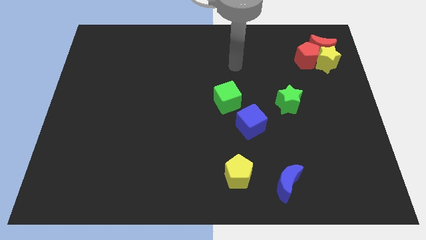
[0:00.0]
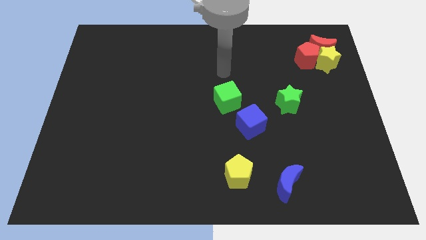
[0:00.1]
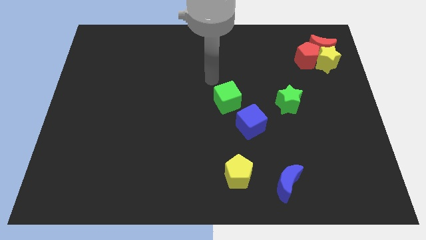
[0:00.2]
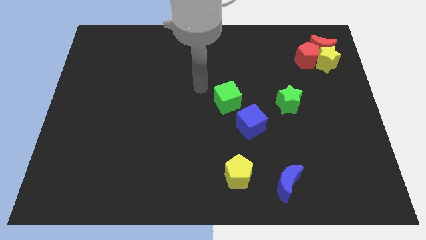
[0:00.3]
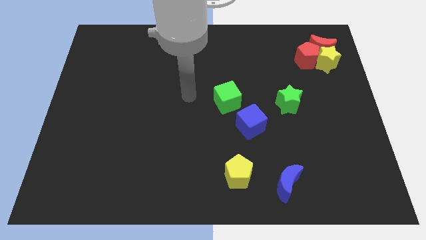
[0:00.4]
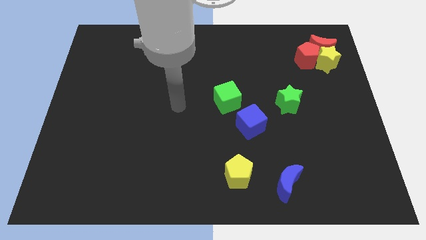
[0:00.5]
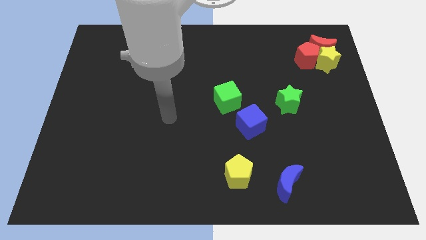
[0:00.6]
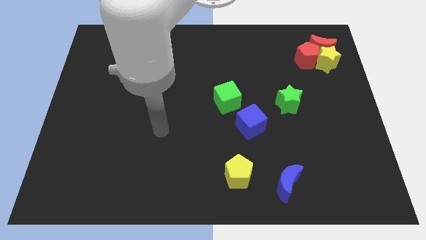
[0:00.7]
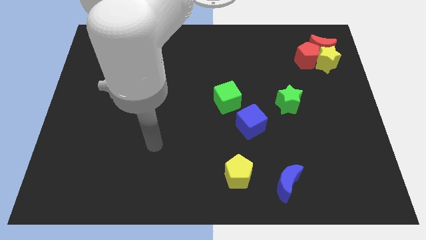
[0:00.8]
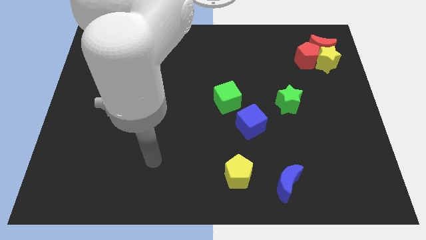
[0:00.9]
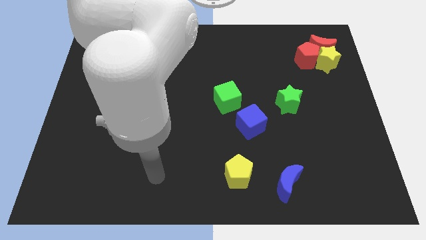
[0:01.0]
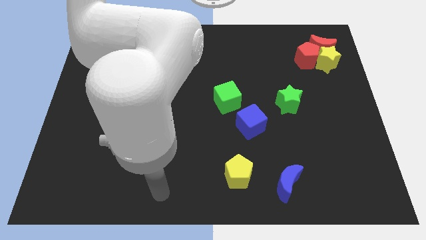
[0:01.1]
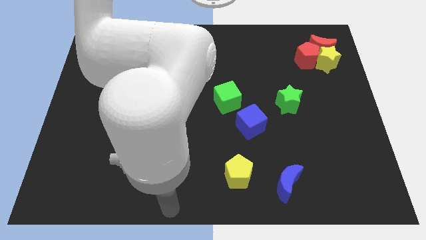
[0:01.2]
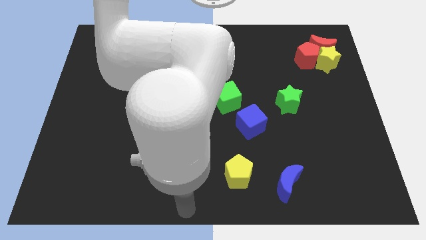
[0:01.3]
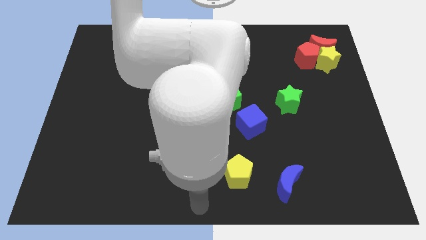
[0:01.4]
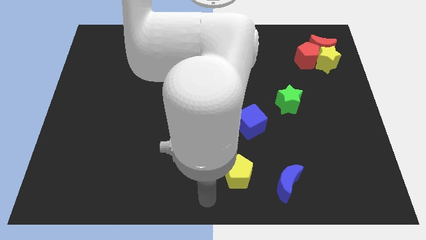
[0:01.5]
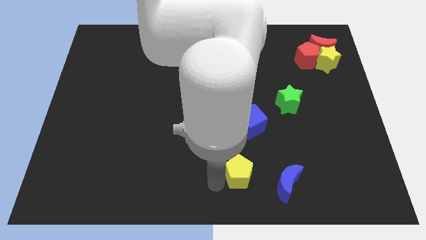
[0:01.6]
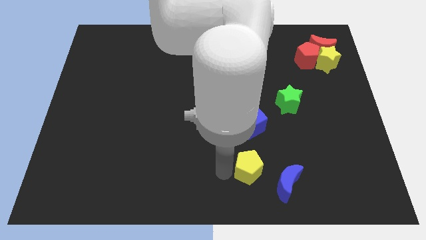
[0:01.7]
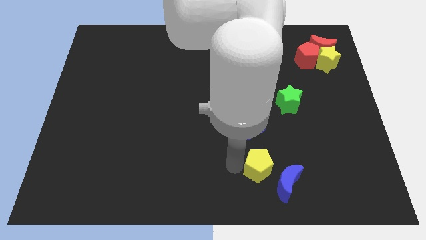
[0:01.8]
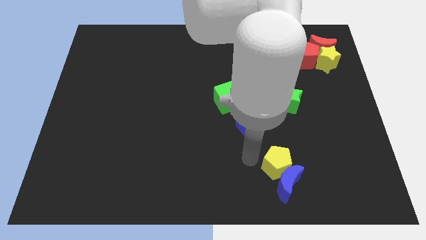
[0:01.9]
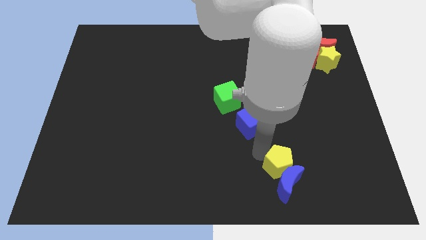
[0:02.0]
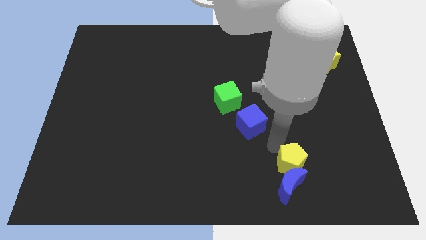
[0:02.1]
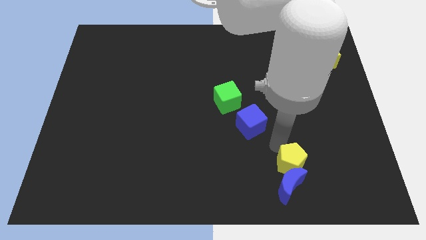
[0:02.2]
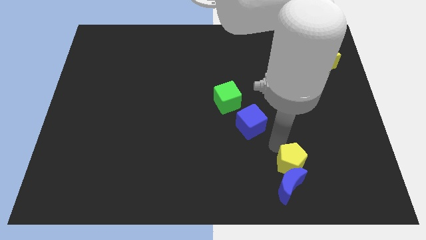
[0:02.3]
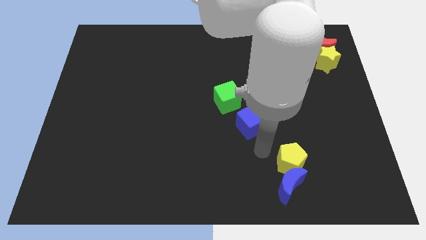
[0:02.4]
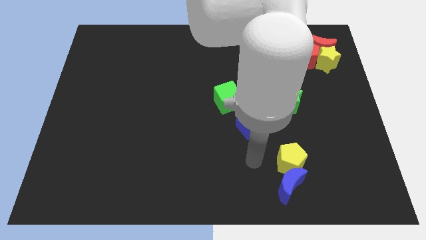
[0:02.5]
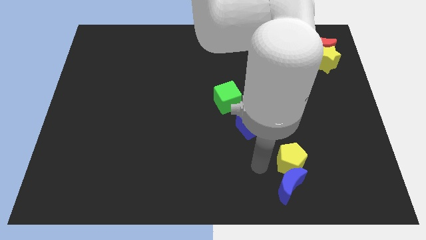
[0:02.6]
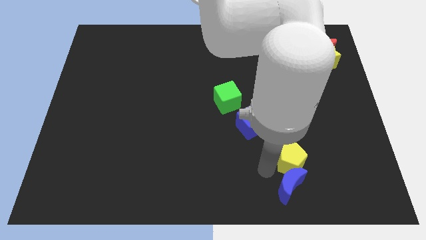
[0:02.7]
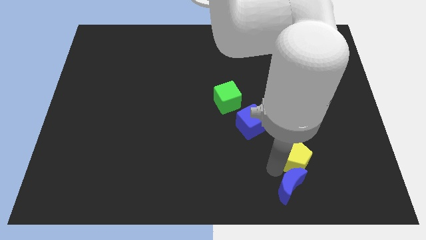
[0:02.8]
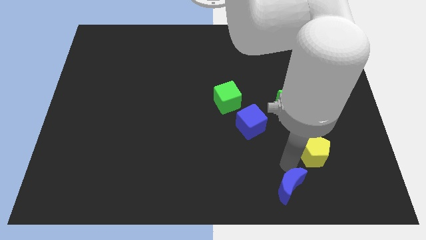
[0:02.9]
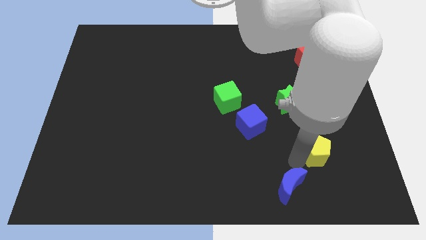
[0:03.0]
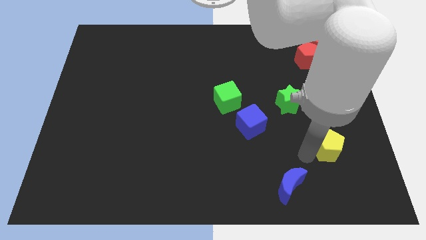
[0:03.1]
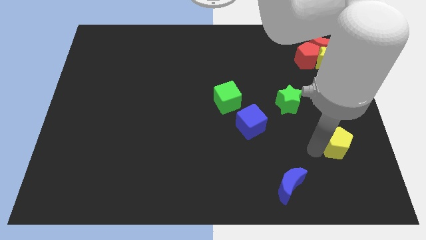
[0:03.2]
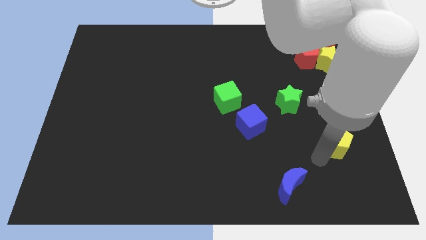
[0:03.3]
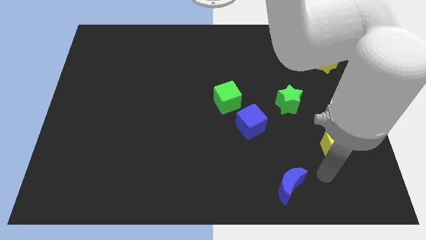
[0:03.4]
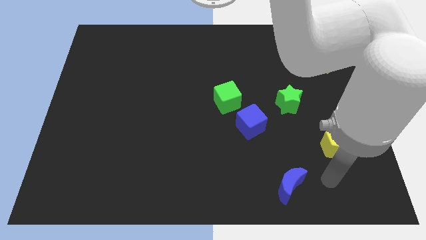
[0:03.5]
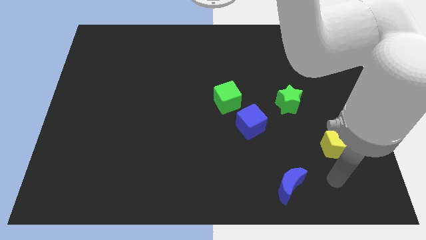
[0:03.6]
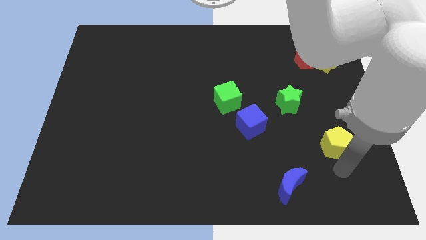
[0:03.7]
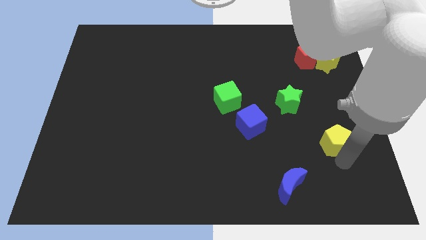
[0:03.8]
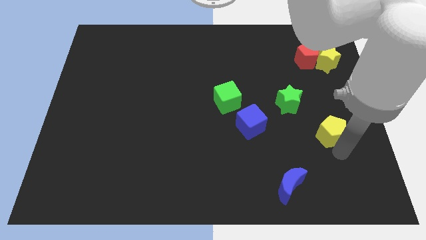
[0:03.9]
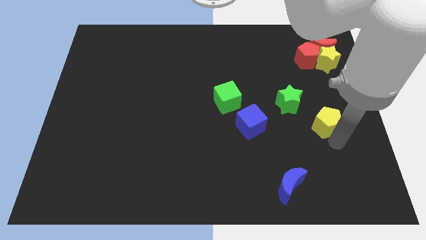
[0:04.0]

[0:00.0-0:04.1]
separate yellow pentagon from blue moon

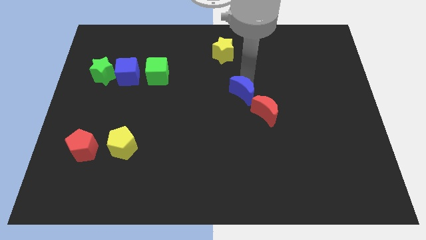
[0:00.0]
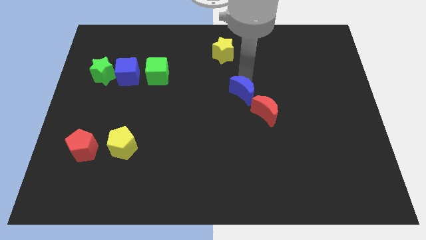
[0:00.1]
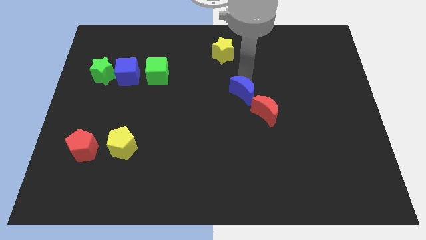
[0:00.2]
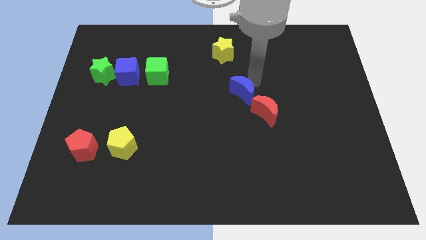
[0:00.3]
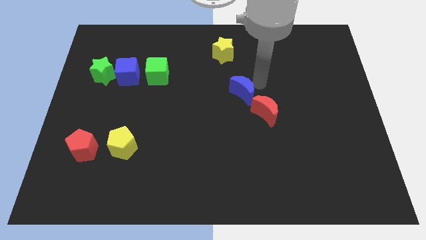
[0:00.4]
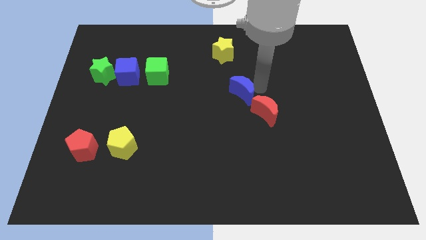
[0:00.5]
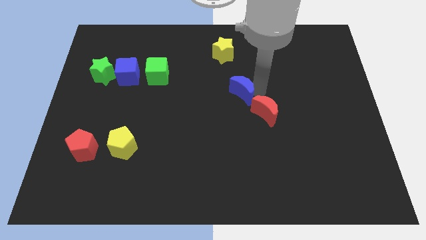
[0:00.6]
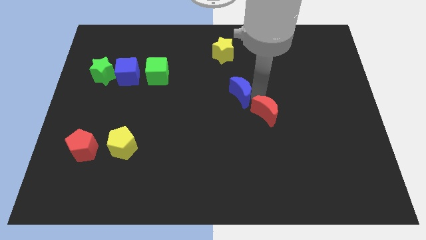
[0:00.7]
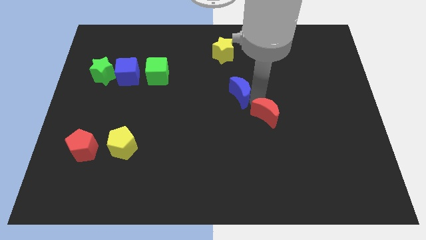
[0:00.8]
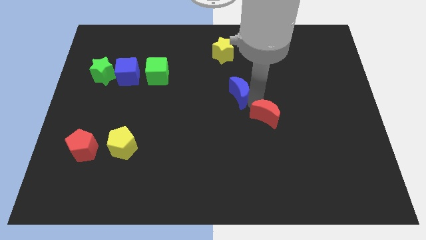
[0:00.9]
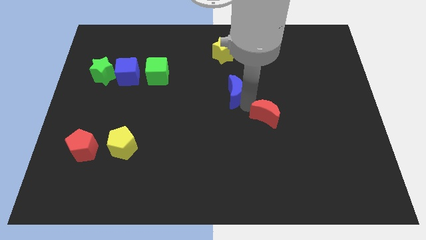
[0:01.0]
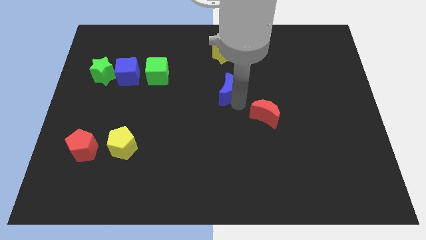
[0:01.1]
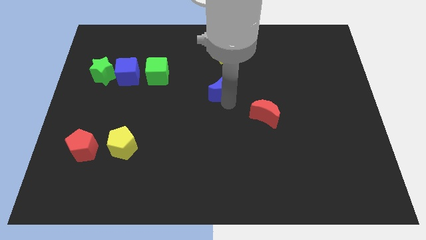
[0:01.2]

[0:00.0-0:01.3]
place the blue crescent below yellow star

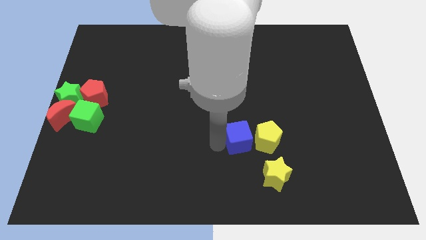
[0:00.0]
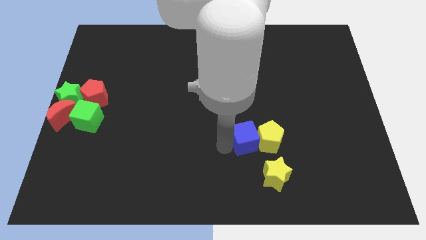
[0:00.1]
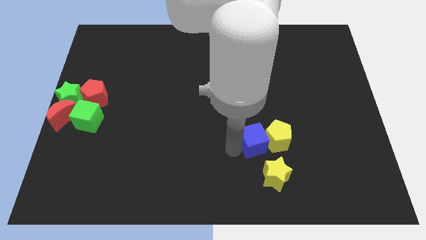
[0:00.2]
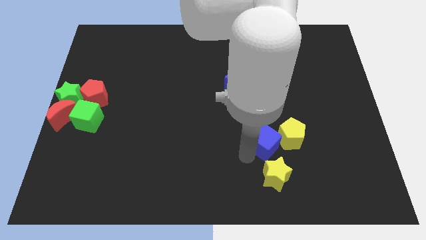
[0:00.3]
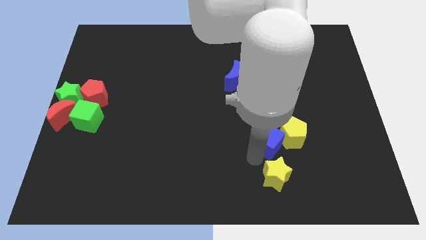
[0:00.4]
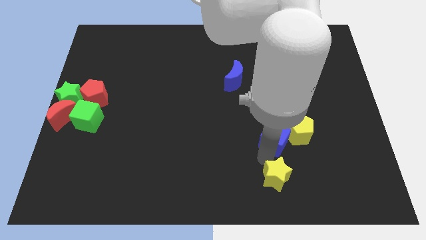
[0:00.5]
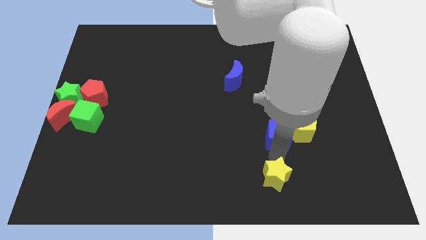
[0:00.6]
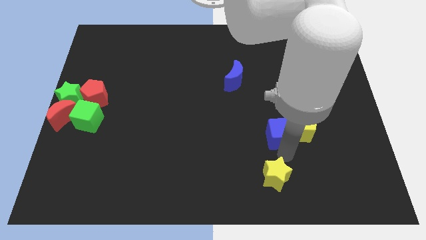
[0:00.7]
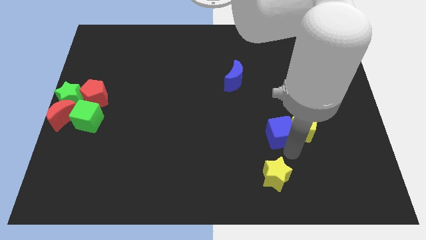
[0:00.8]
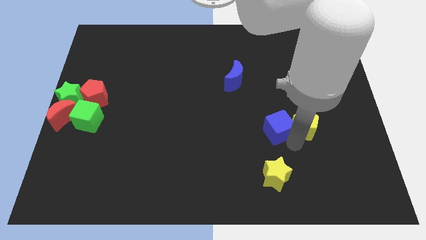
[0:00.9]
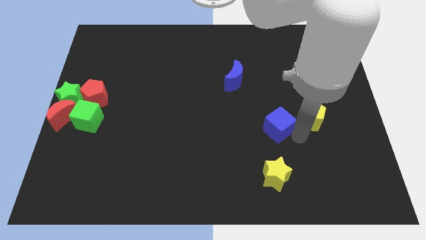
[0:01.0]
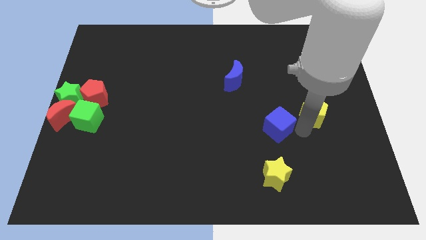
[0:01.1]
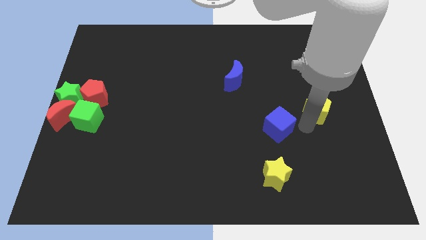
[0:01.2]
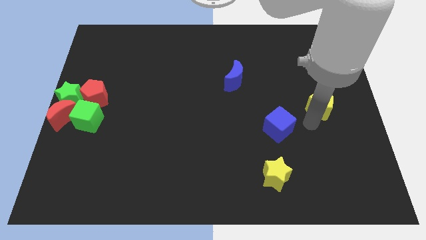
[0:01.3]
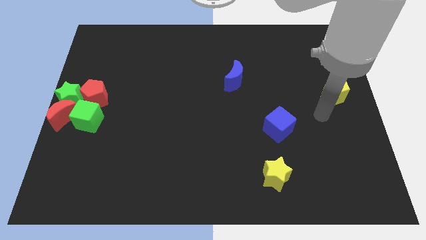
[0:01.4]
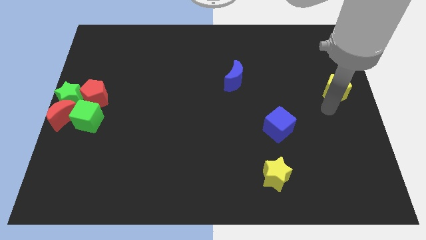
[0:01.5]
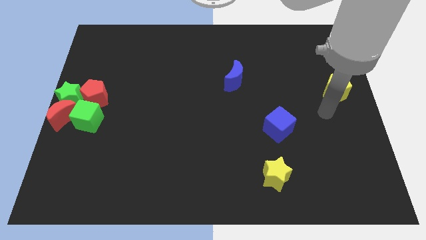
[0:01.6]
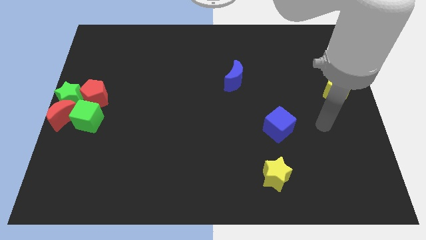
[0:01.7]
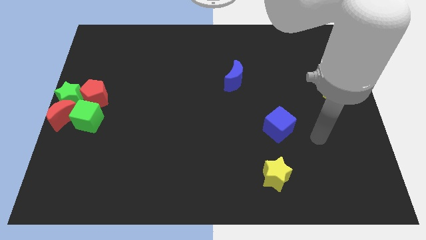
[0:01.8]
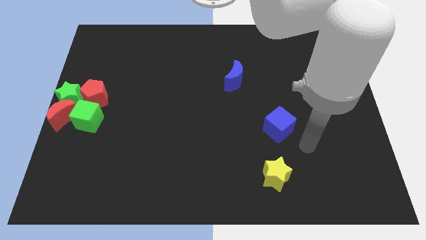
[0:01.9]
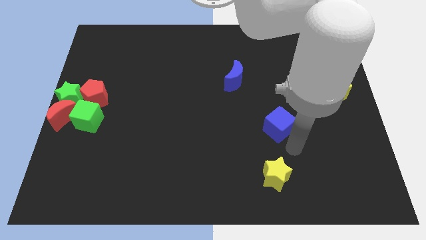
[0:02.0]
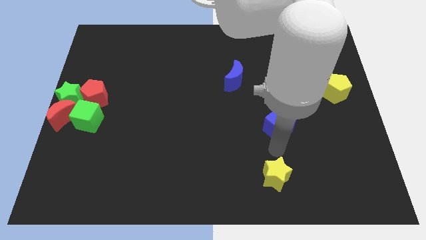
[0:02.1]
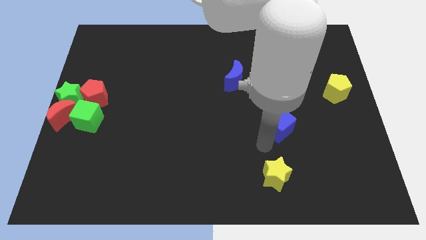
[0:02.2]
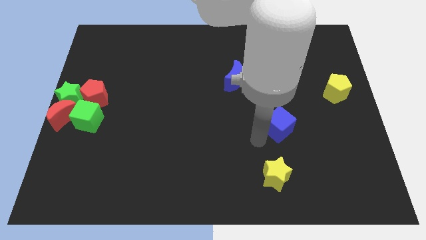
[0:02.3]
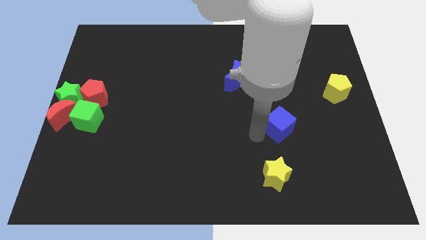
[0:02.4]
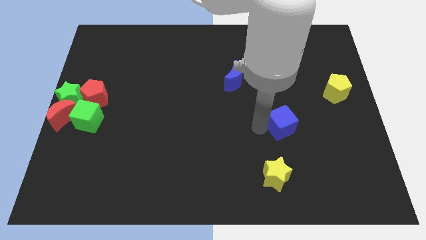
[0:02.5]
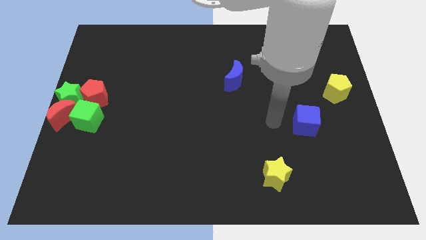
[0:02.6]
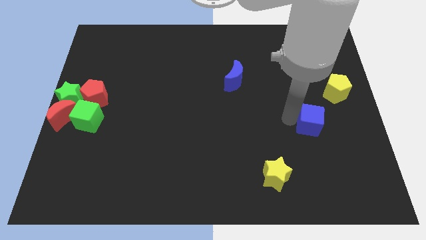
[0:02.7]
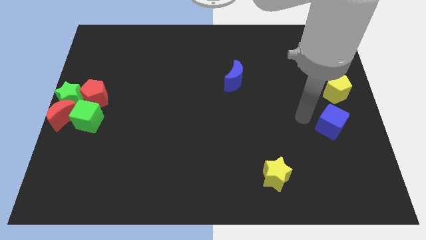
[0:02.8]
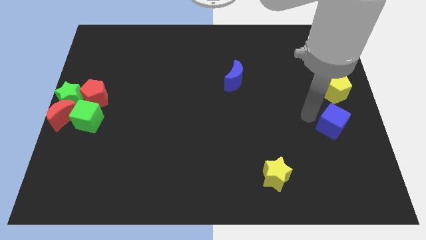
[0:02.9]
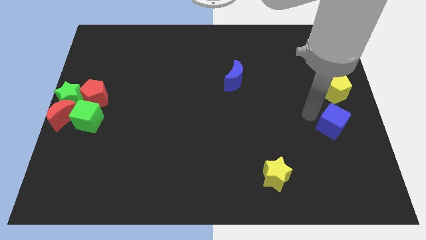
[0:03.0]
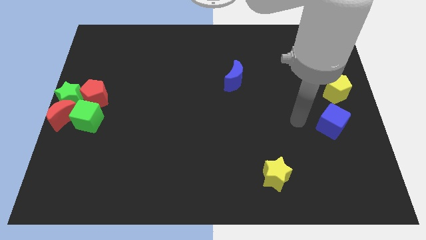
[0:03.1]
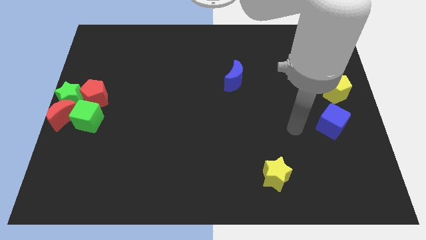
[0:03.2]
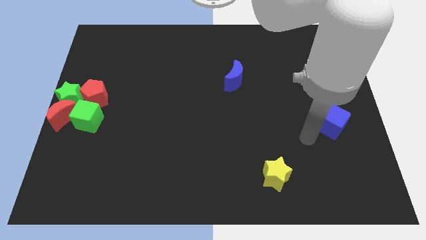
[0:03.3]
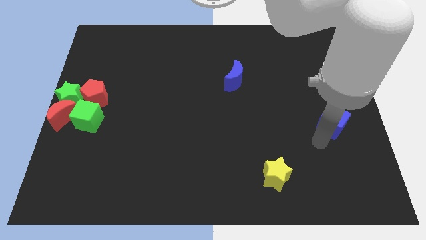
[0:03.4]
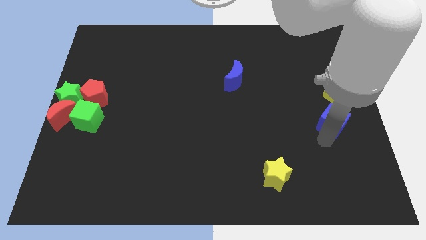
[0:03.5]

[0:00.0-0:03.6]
push the blue cube slightly to the right
